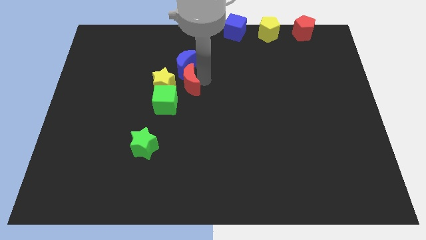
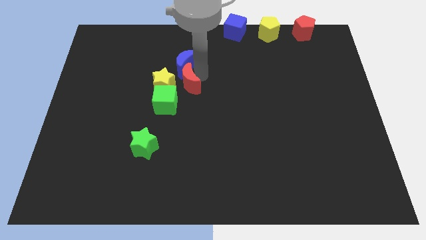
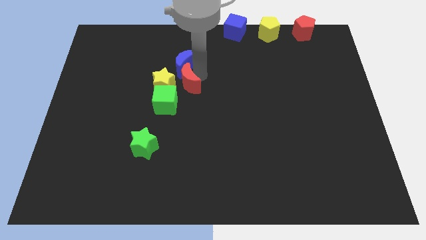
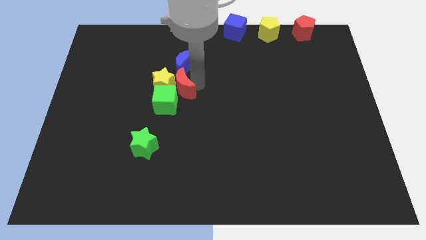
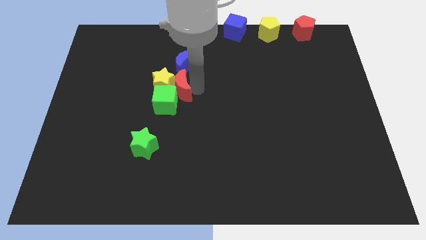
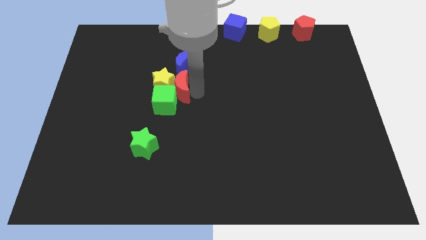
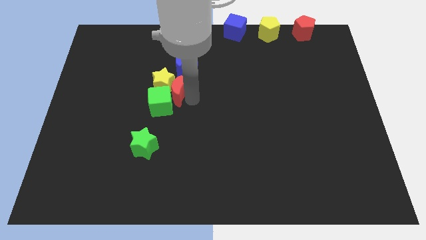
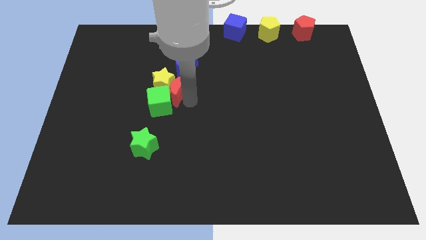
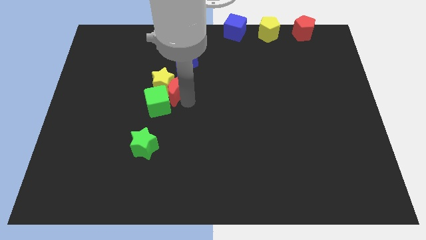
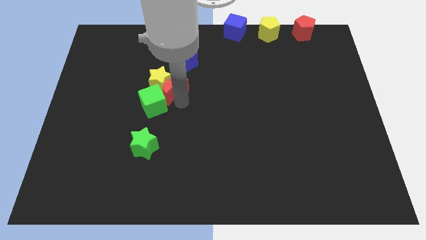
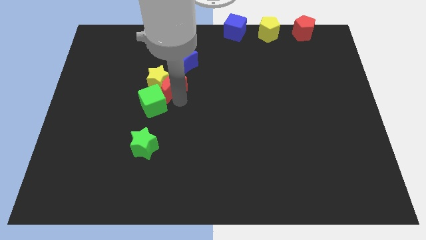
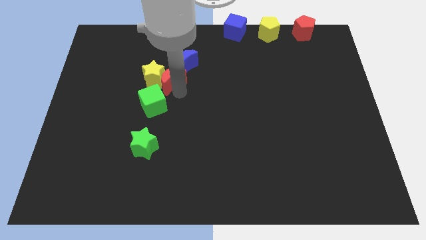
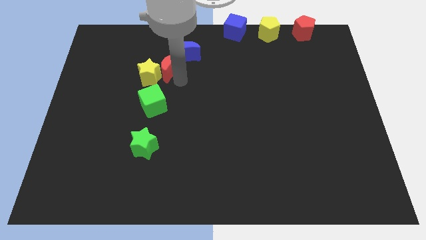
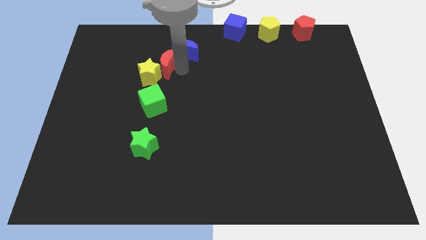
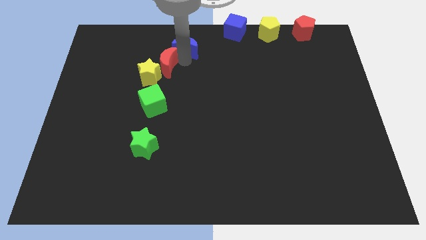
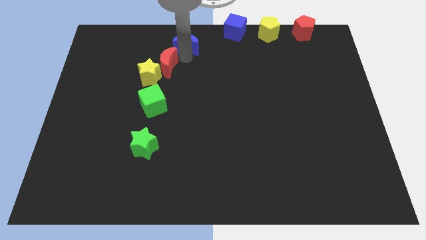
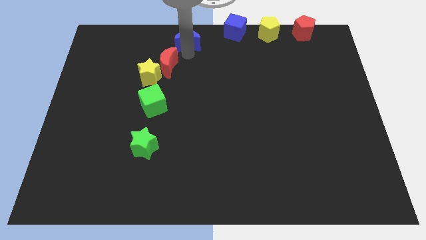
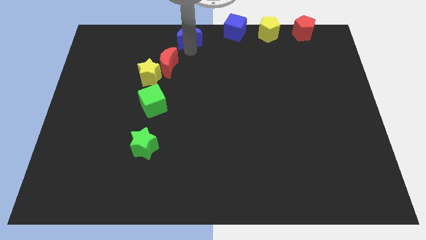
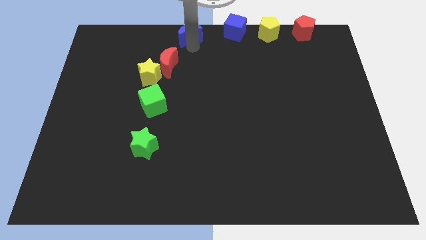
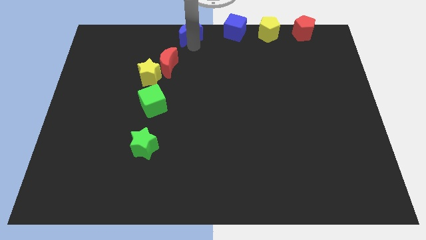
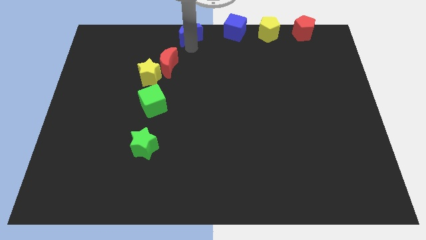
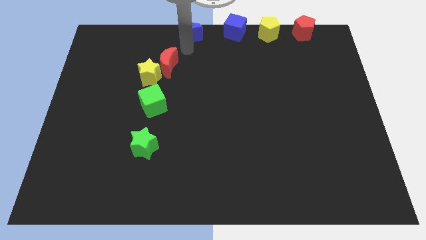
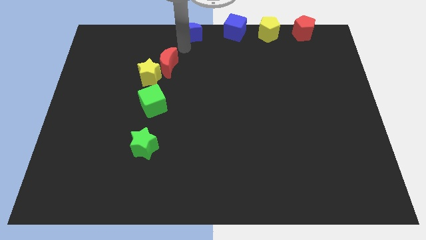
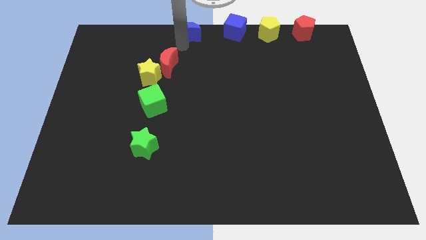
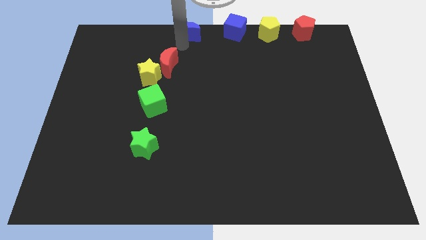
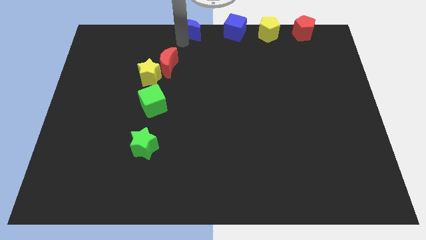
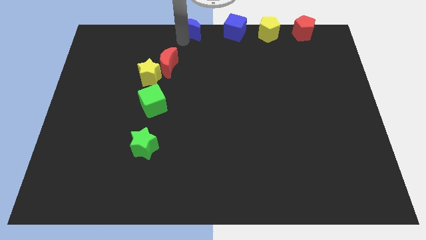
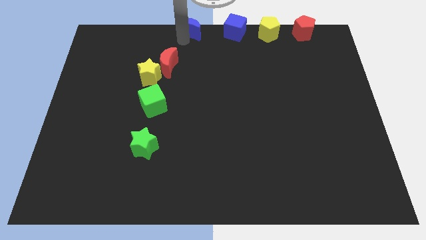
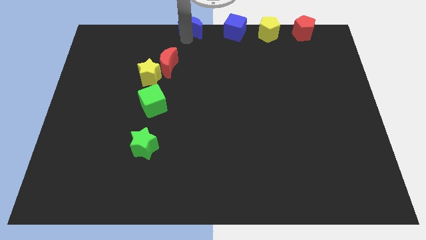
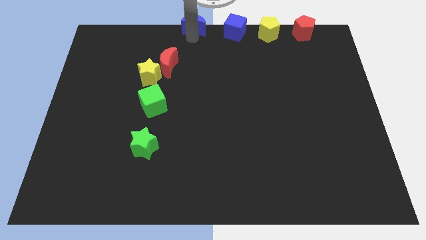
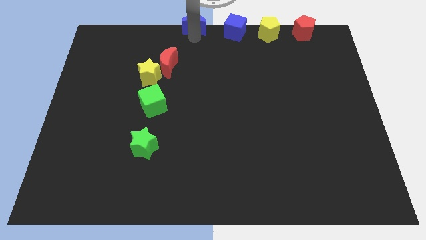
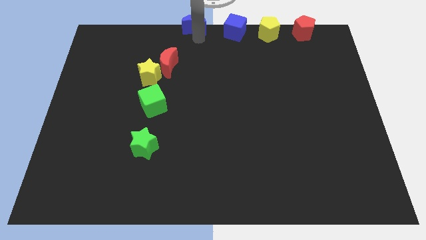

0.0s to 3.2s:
place blue crescent beside blue cube

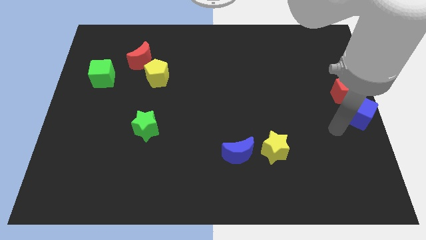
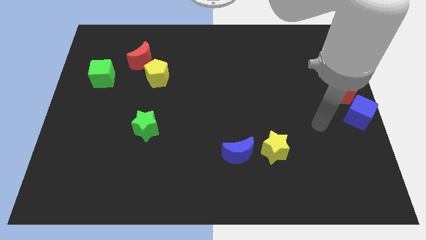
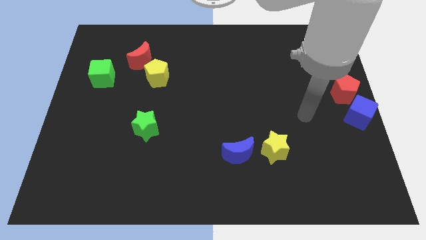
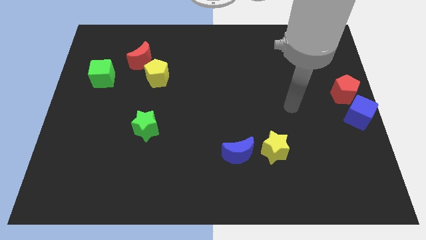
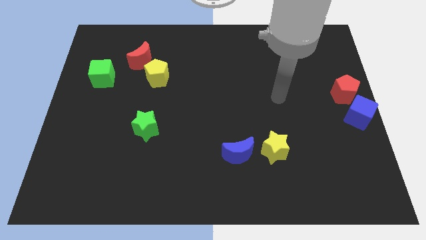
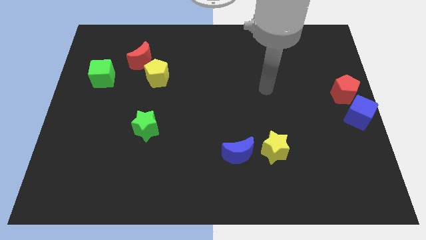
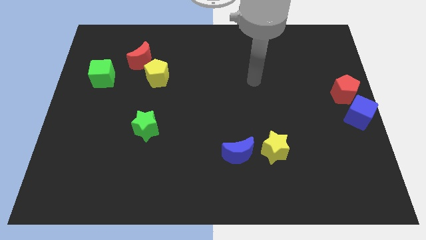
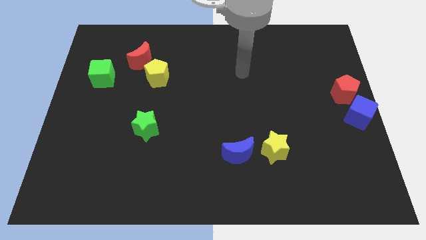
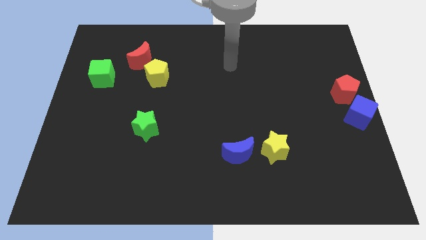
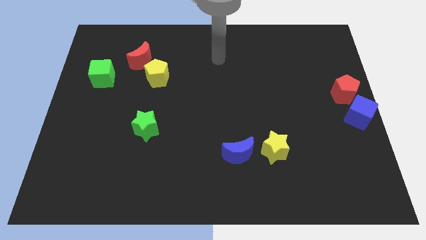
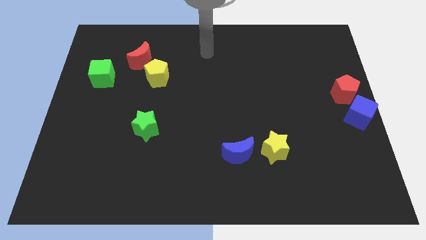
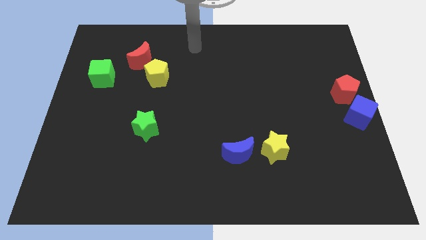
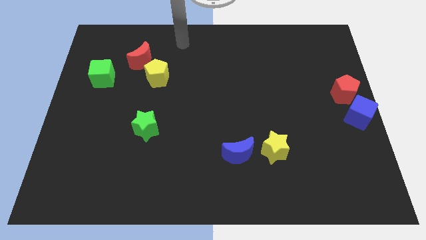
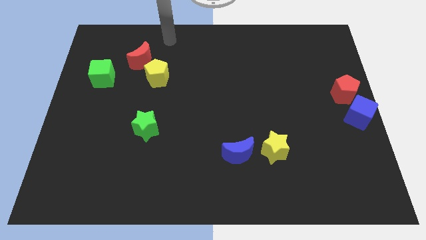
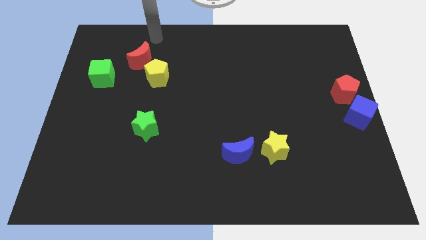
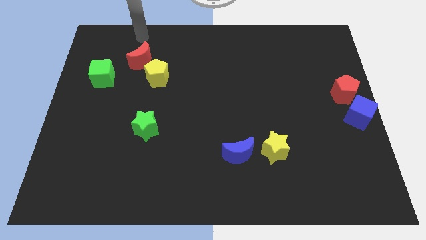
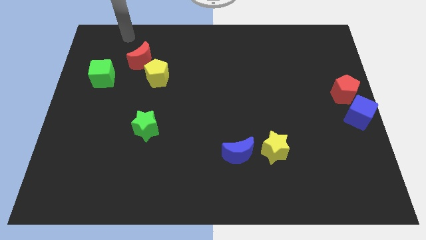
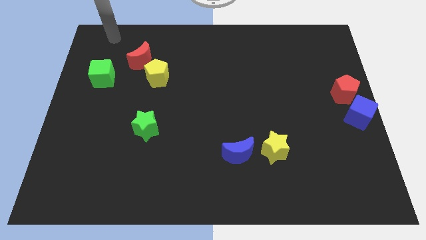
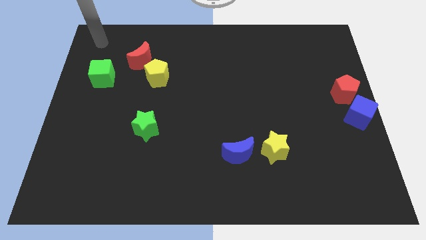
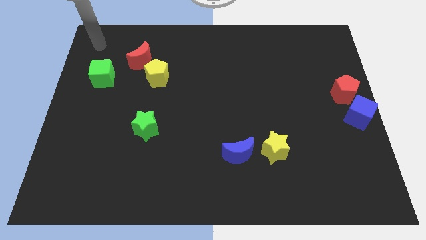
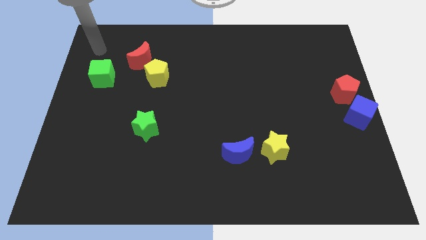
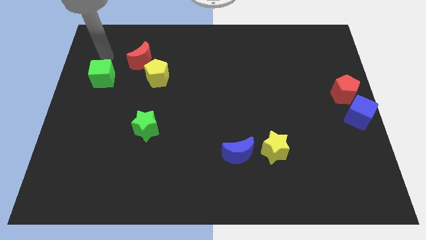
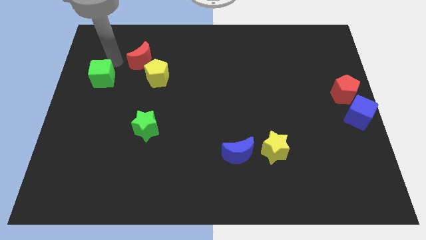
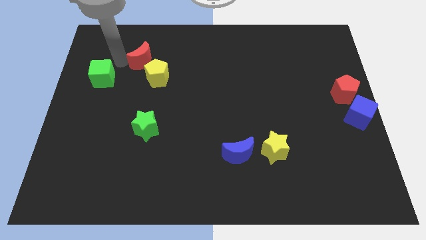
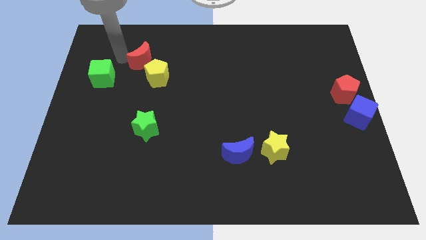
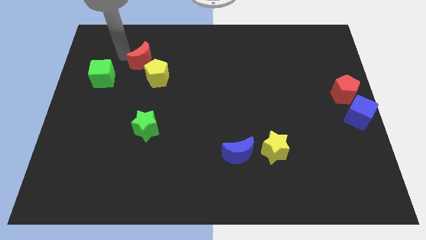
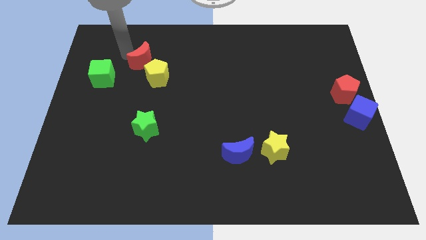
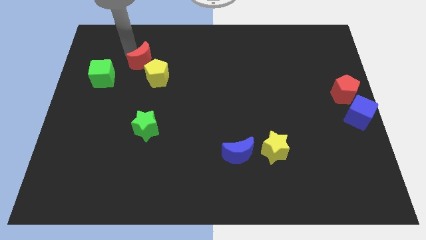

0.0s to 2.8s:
move your arm towards the red crescent

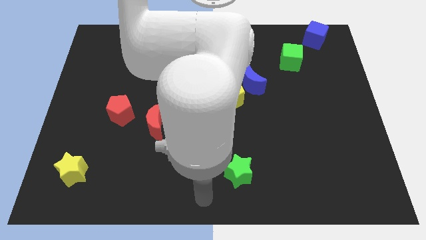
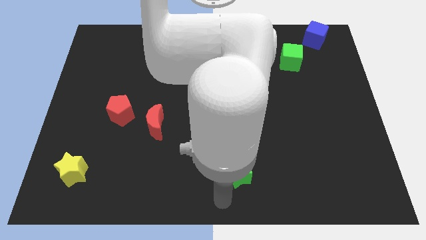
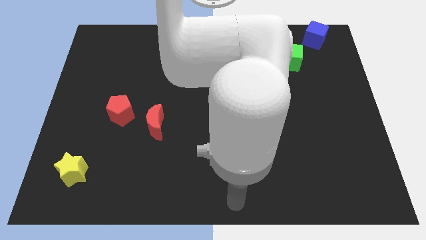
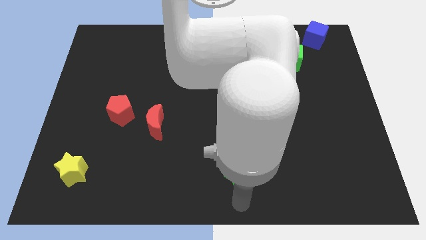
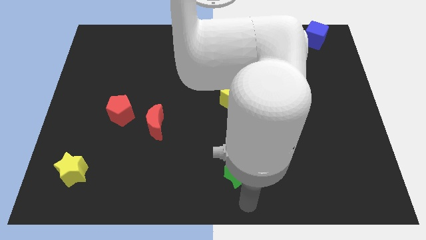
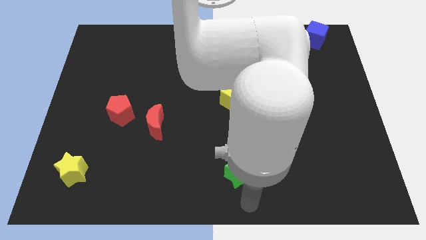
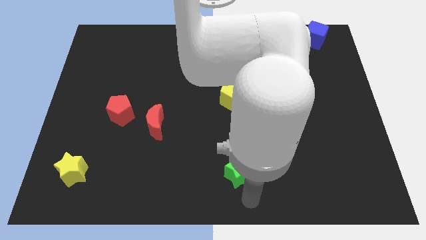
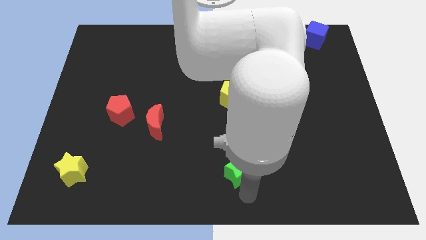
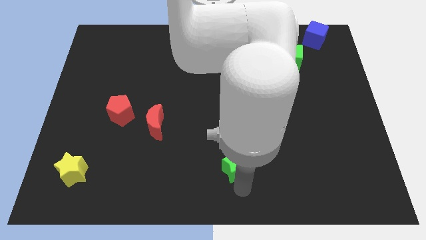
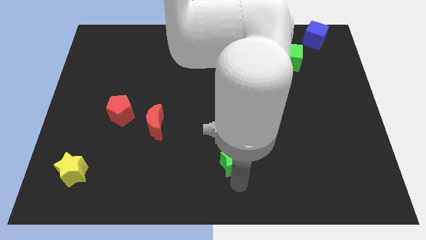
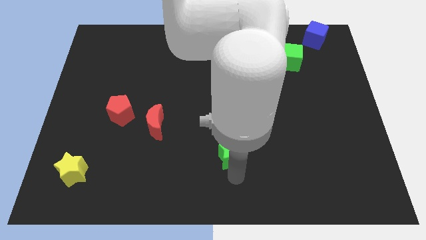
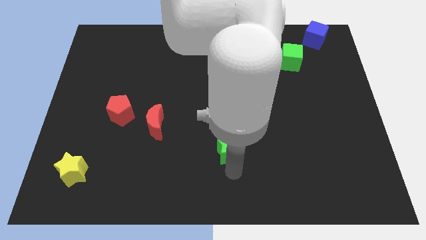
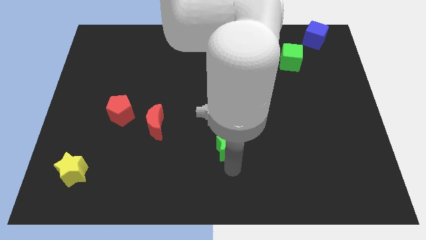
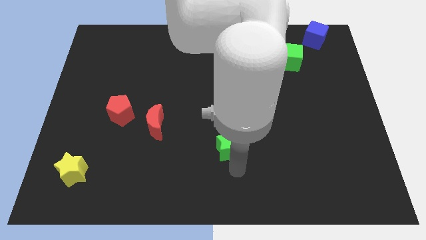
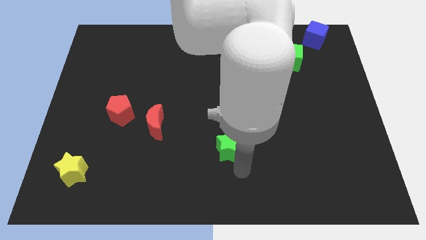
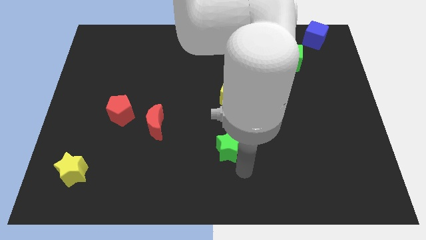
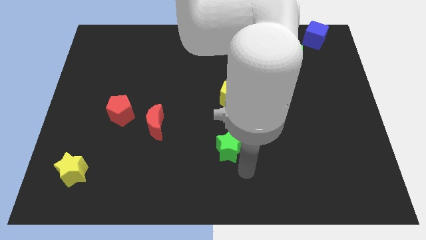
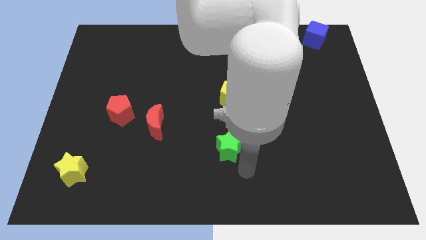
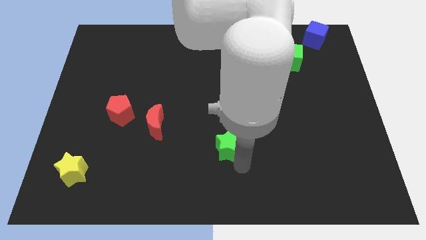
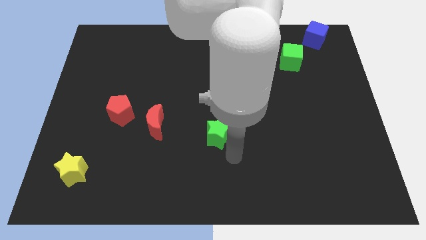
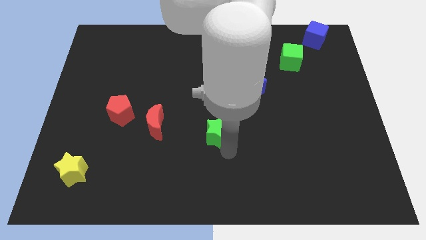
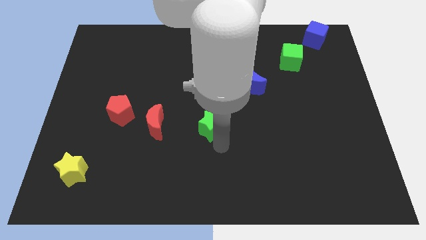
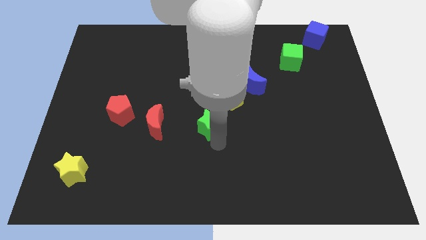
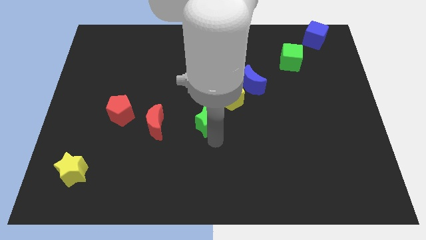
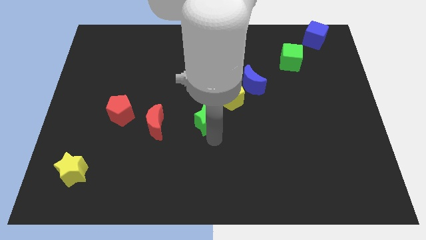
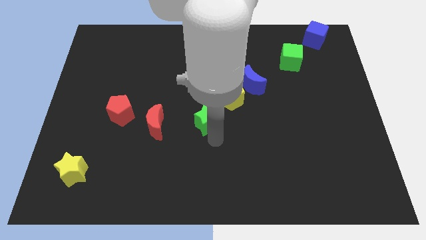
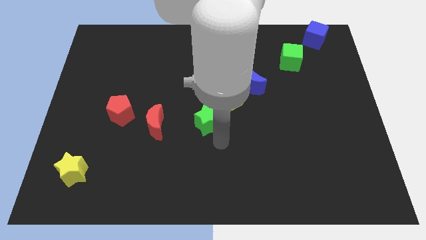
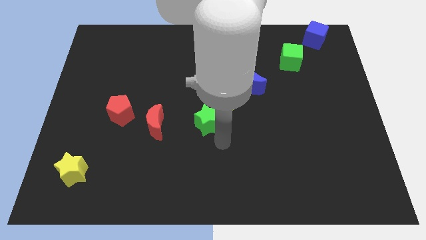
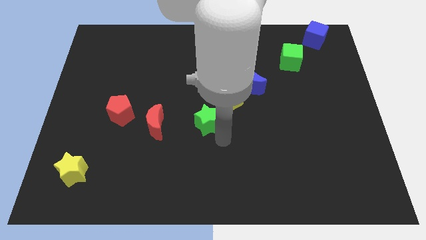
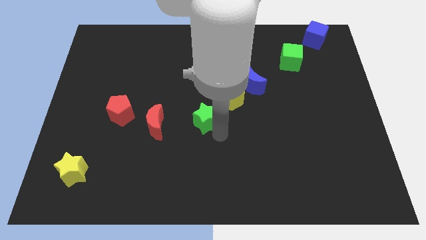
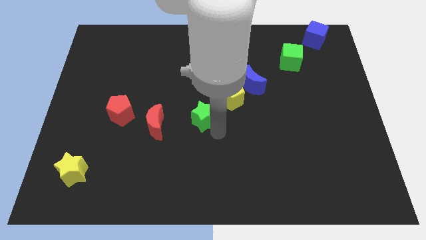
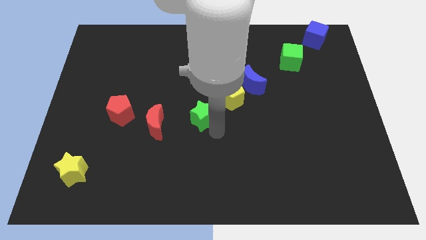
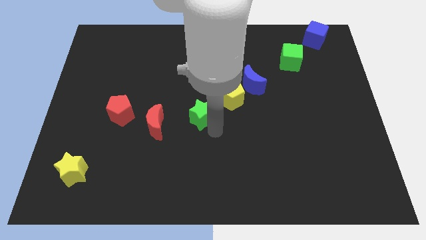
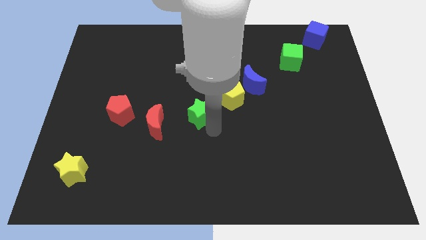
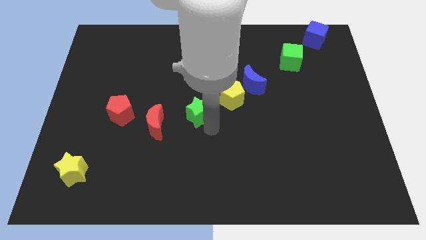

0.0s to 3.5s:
move the green star between yellow pentagon and red moon
